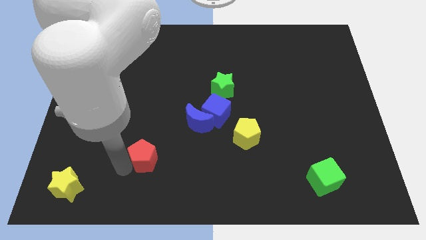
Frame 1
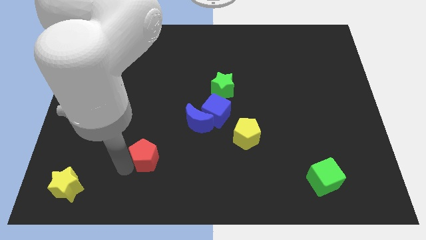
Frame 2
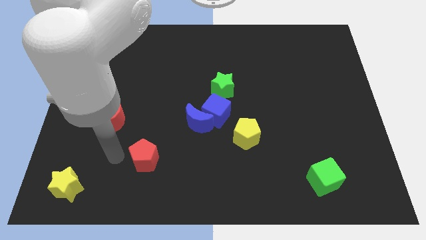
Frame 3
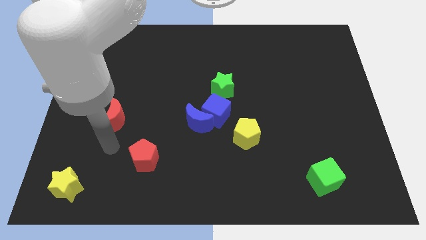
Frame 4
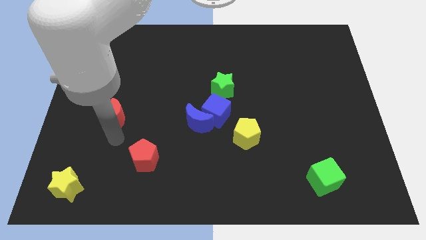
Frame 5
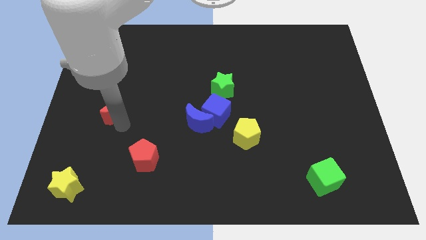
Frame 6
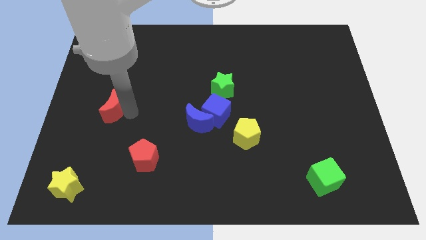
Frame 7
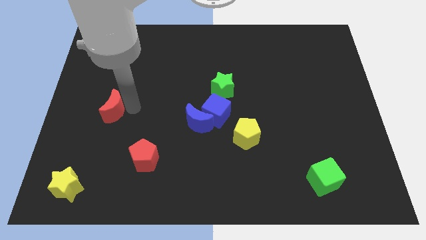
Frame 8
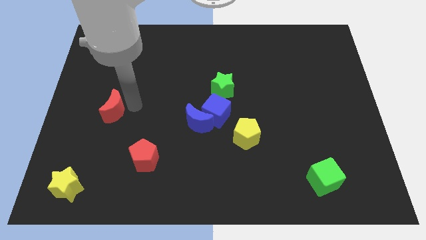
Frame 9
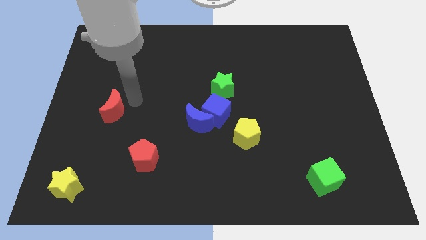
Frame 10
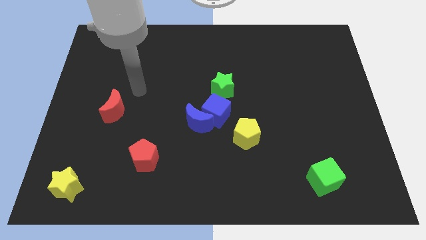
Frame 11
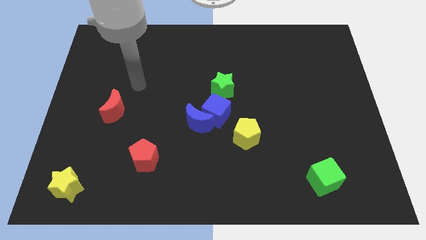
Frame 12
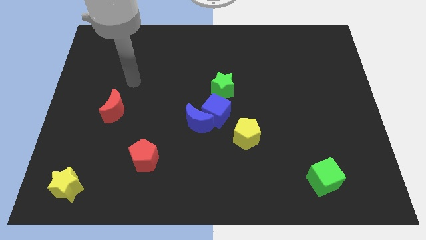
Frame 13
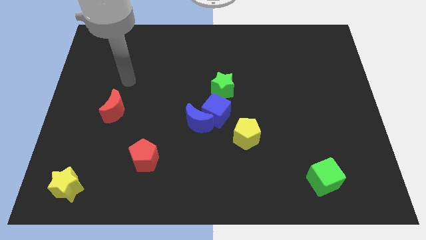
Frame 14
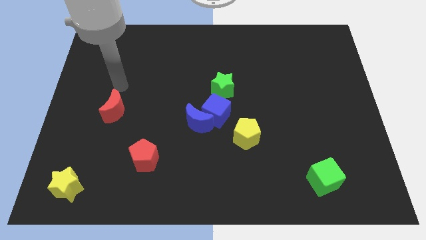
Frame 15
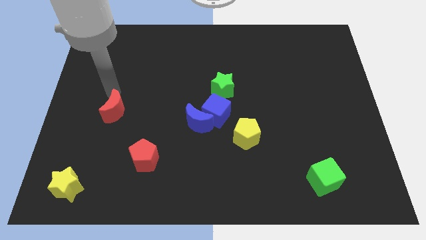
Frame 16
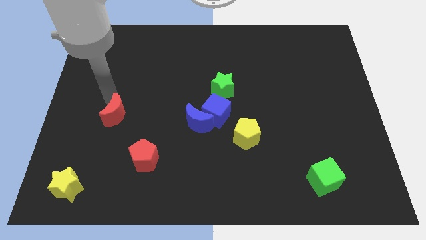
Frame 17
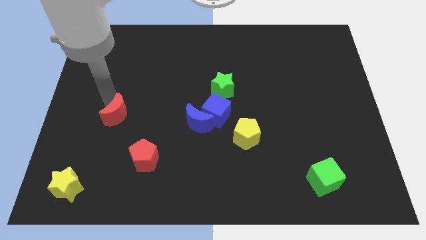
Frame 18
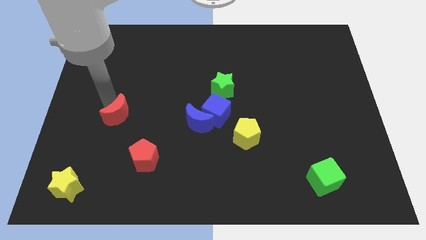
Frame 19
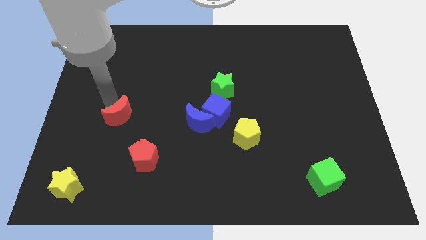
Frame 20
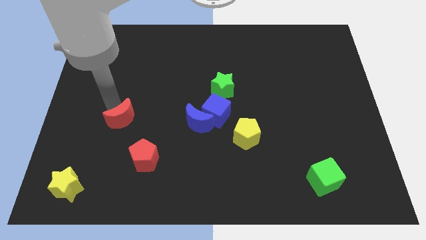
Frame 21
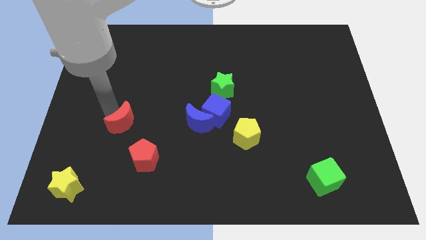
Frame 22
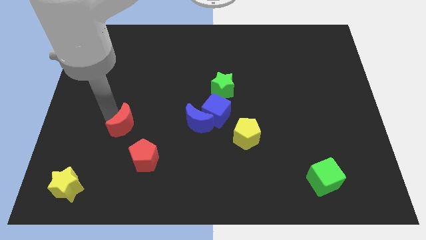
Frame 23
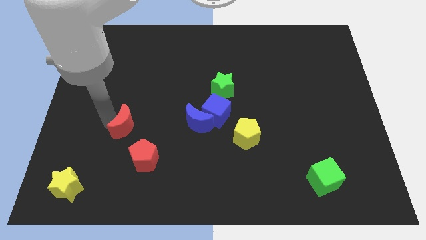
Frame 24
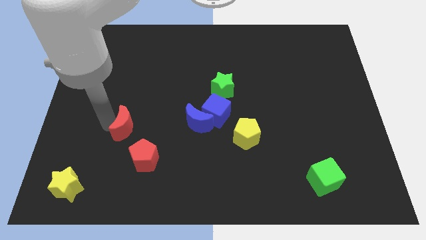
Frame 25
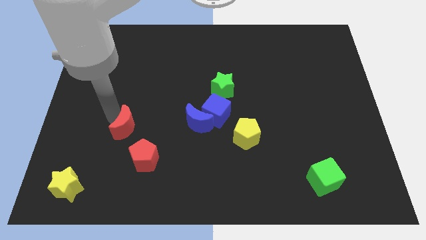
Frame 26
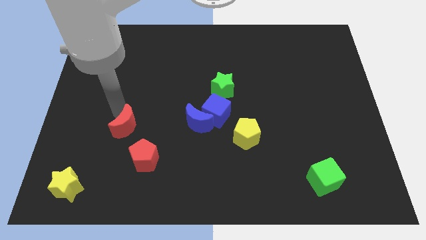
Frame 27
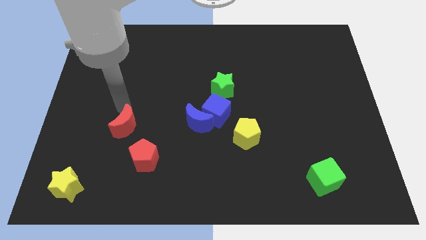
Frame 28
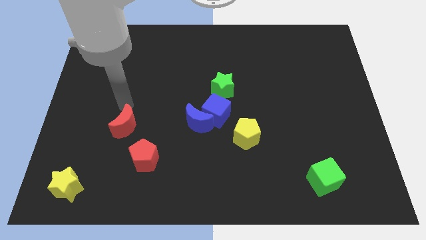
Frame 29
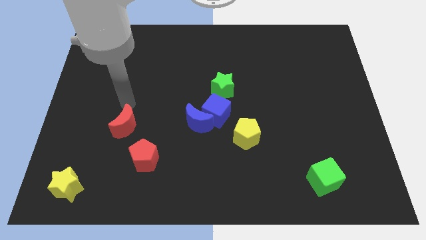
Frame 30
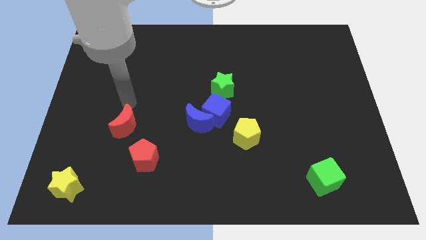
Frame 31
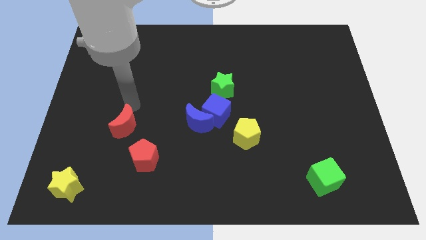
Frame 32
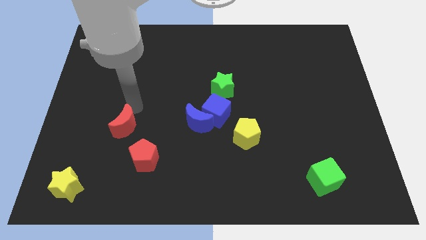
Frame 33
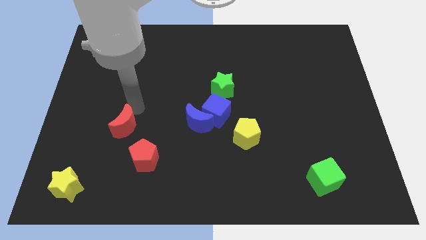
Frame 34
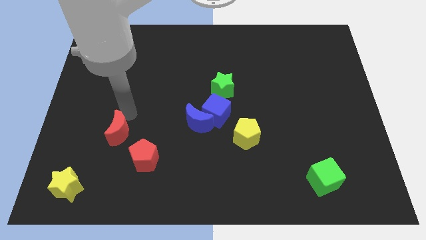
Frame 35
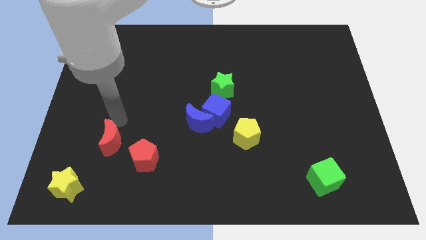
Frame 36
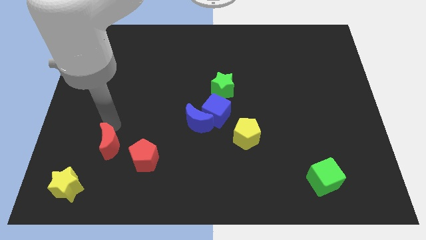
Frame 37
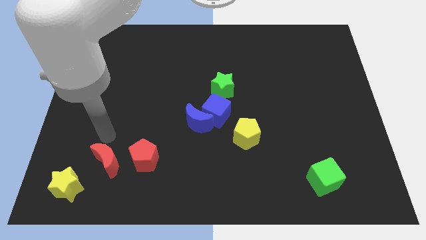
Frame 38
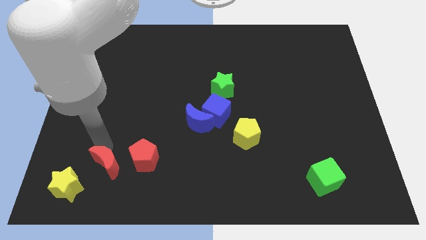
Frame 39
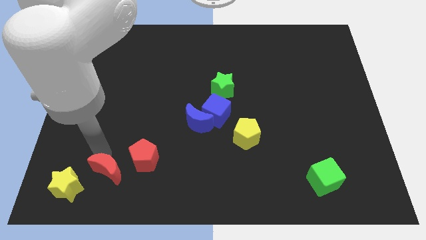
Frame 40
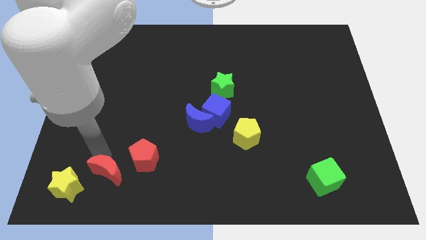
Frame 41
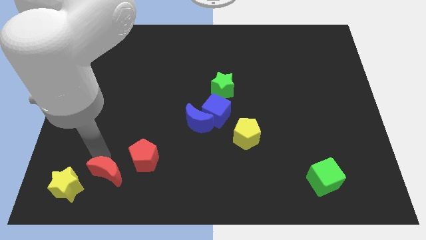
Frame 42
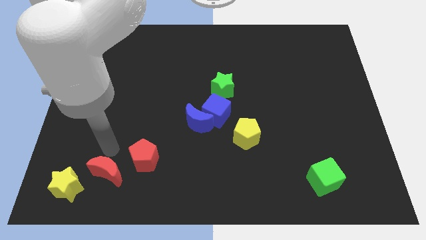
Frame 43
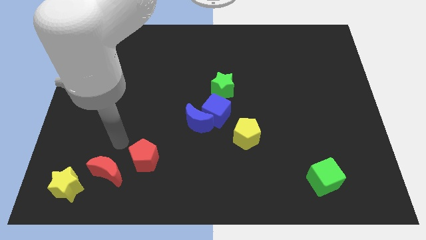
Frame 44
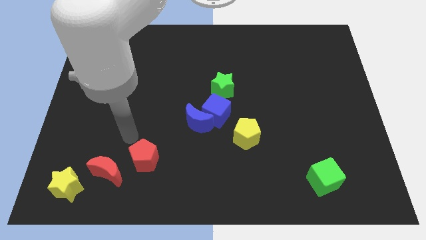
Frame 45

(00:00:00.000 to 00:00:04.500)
move red crescent in between red pentagon and yellow star

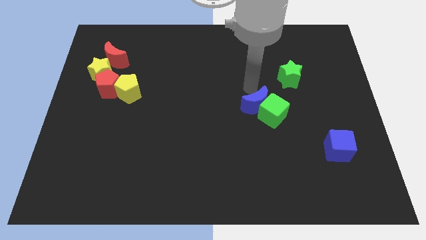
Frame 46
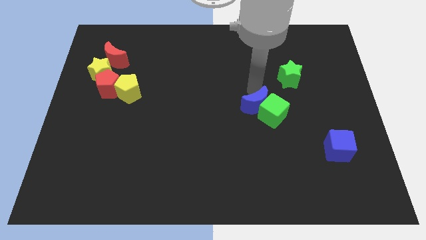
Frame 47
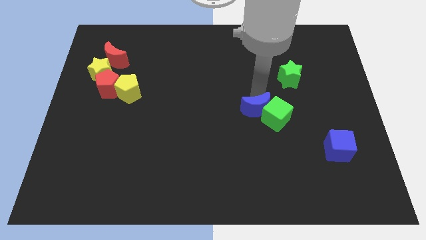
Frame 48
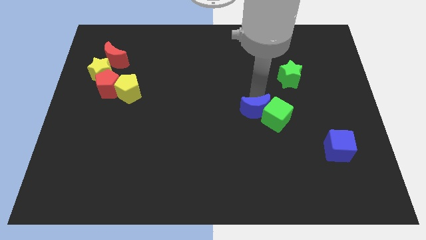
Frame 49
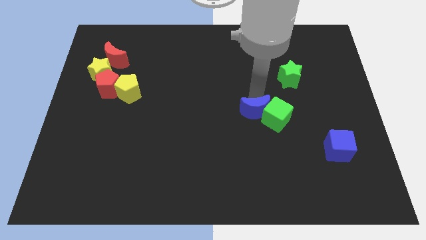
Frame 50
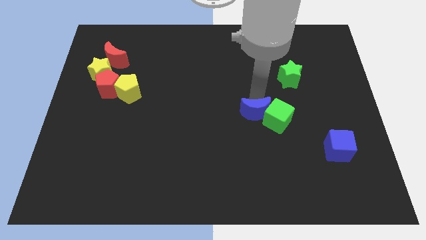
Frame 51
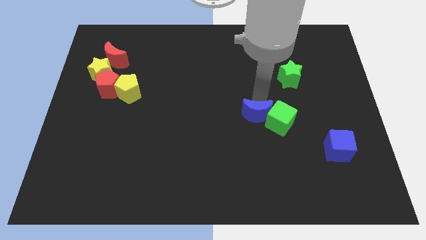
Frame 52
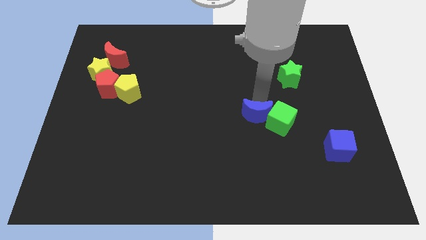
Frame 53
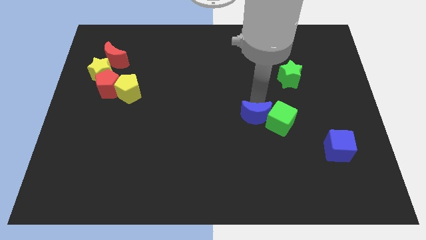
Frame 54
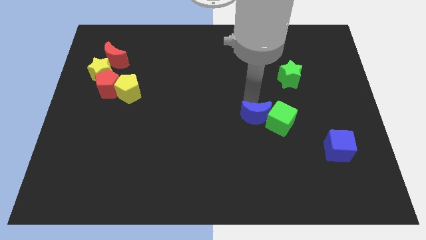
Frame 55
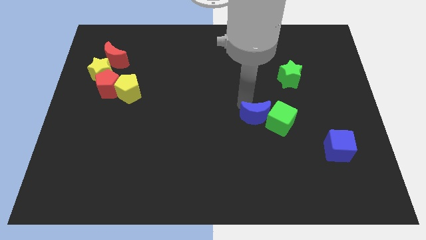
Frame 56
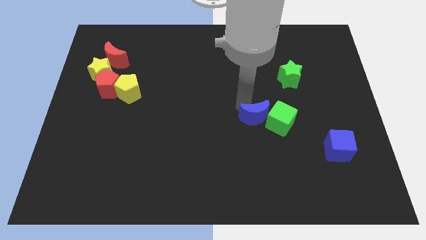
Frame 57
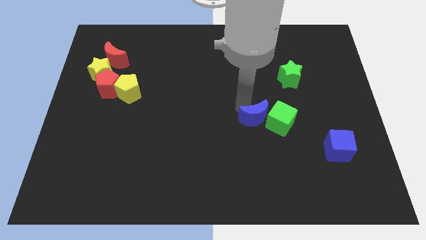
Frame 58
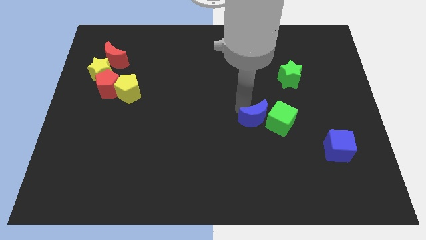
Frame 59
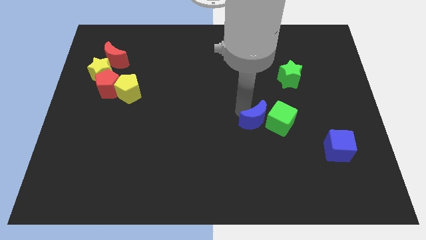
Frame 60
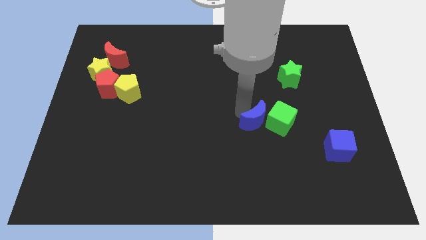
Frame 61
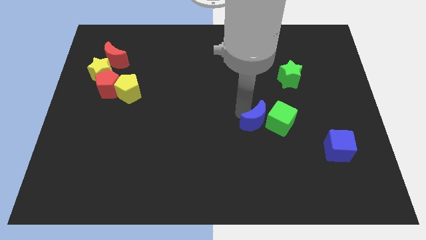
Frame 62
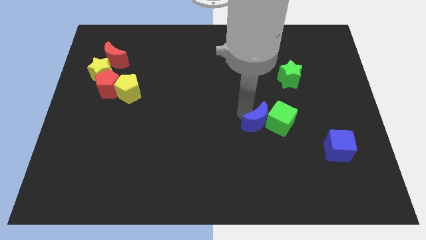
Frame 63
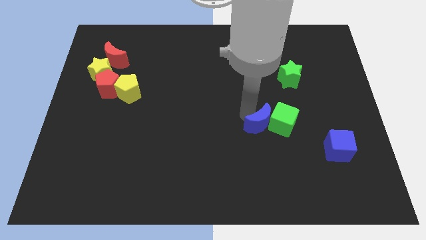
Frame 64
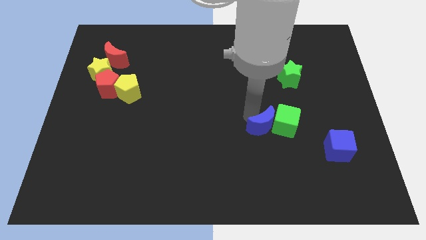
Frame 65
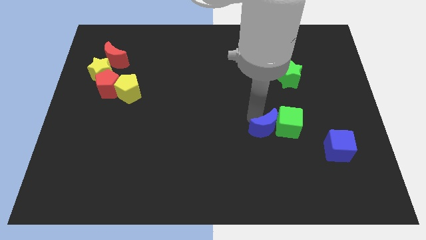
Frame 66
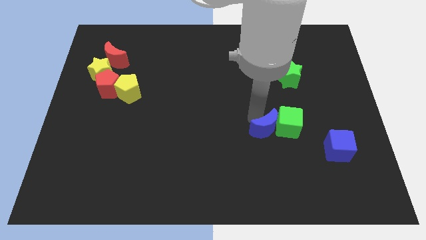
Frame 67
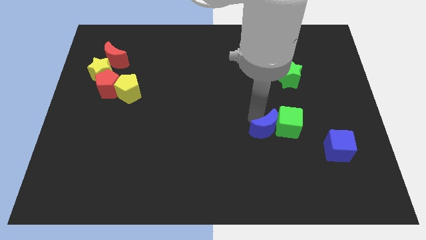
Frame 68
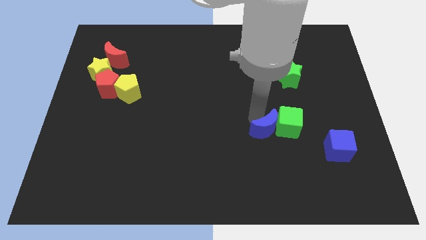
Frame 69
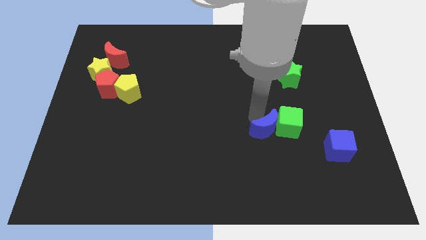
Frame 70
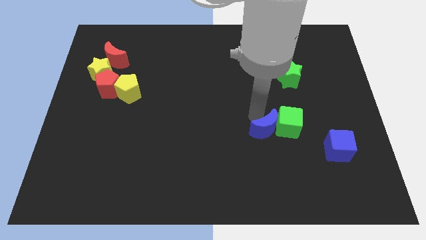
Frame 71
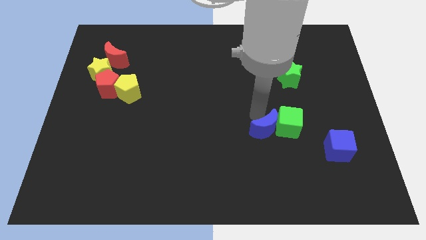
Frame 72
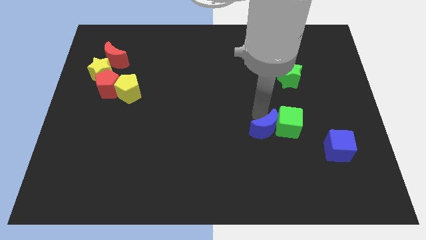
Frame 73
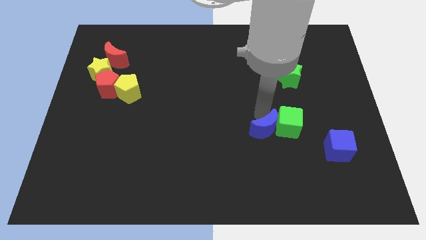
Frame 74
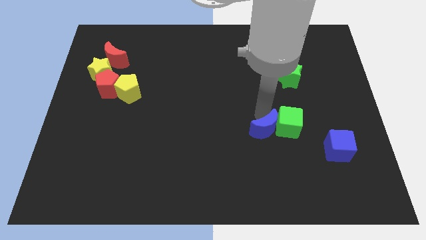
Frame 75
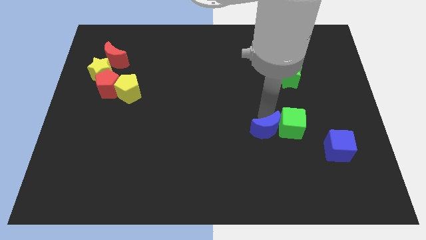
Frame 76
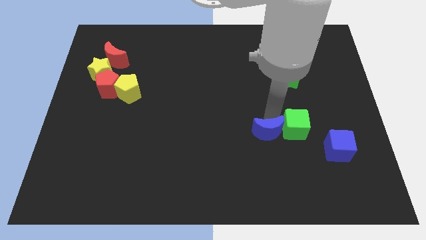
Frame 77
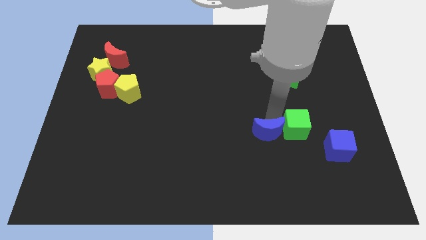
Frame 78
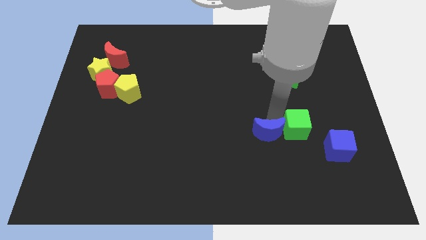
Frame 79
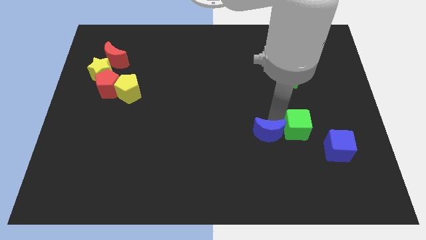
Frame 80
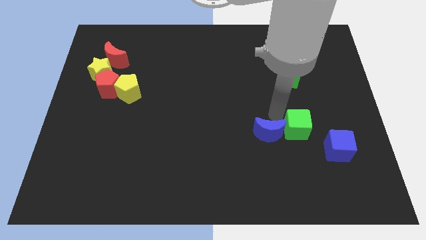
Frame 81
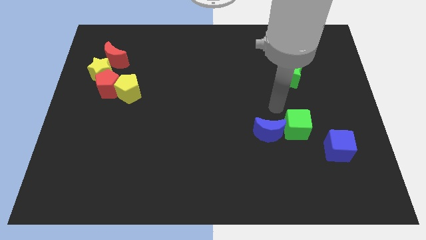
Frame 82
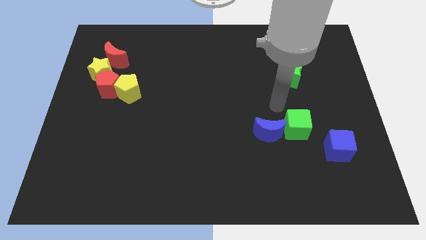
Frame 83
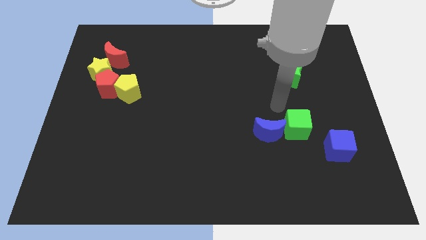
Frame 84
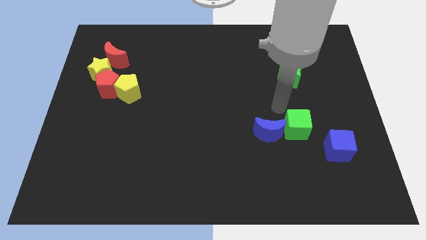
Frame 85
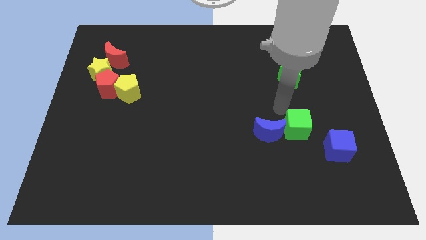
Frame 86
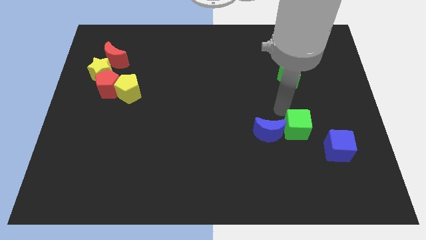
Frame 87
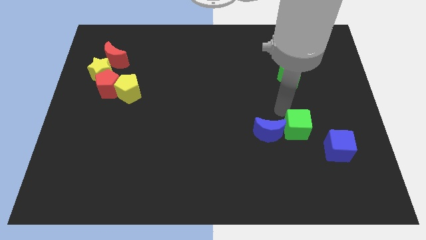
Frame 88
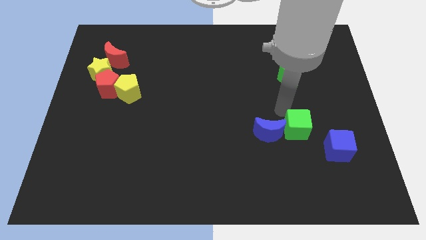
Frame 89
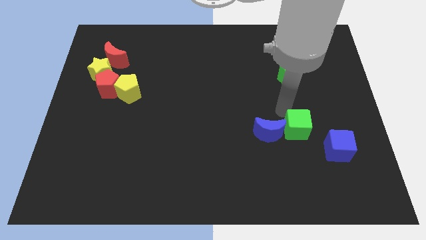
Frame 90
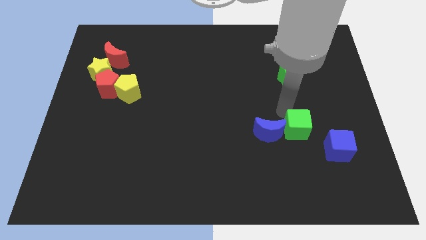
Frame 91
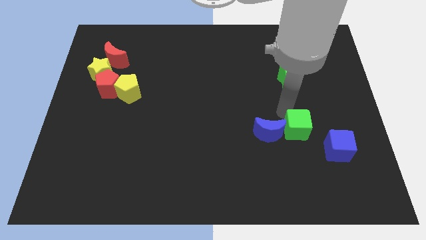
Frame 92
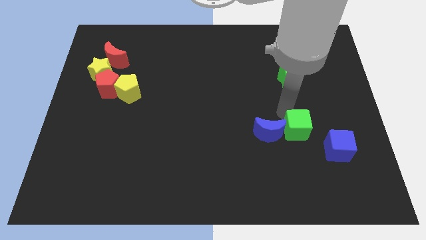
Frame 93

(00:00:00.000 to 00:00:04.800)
move the green cube and the blue crescent towards bottom
